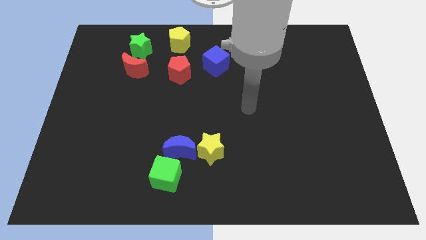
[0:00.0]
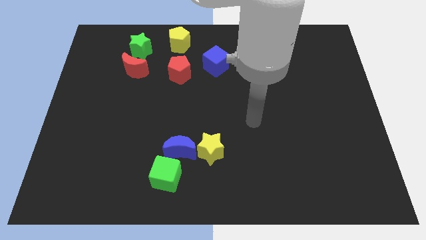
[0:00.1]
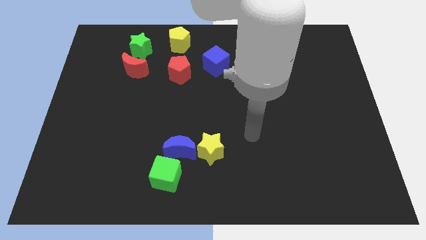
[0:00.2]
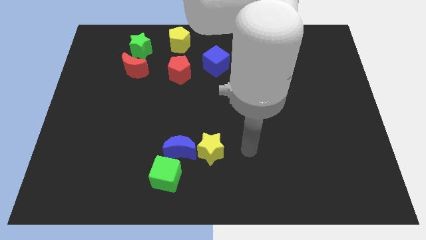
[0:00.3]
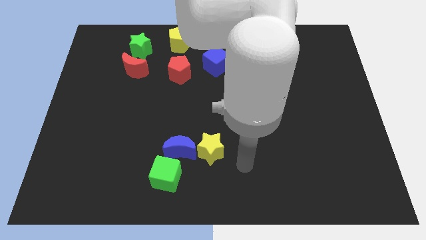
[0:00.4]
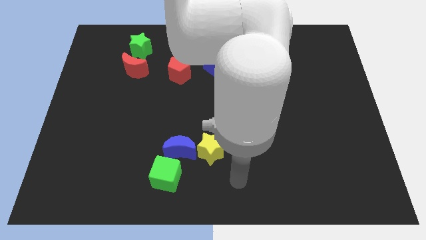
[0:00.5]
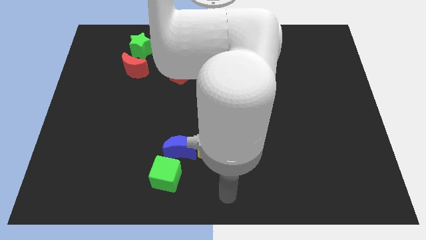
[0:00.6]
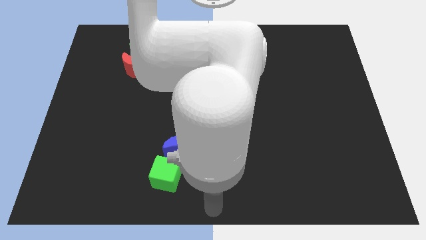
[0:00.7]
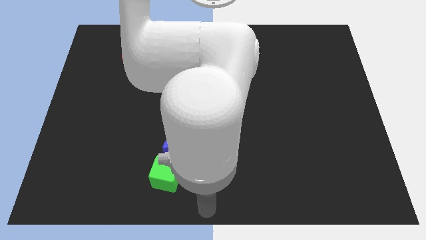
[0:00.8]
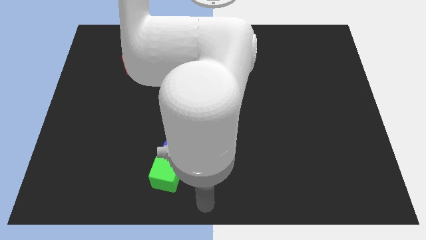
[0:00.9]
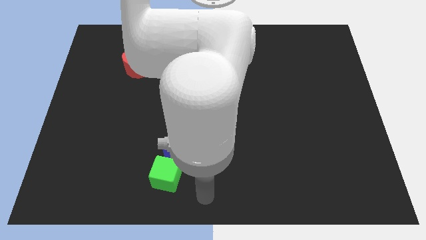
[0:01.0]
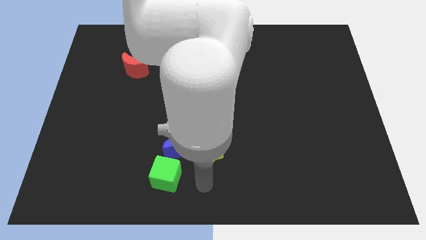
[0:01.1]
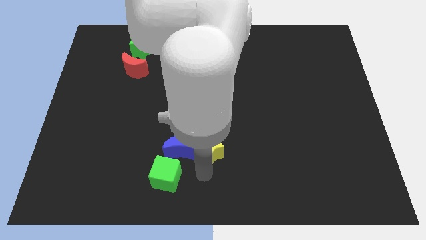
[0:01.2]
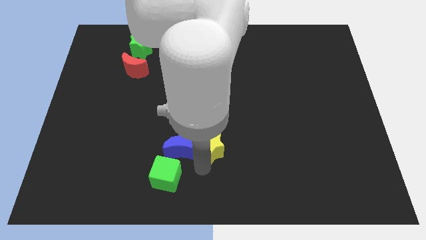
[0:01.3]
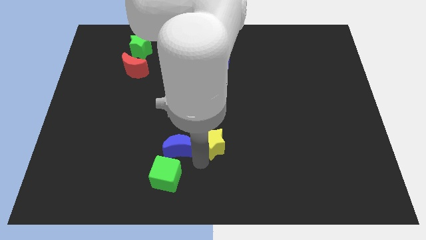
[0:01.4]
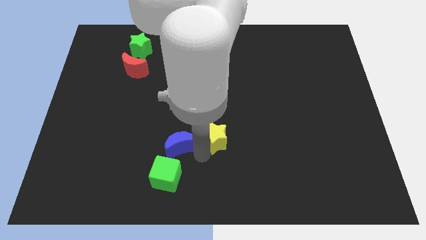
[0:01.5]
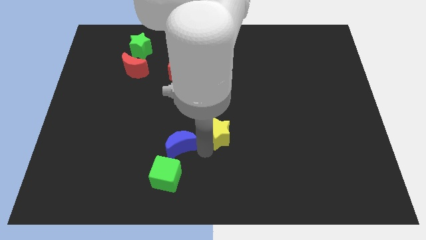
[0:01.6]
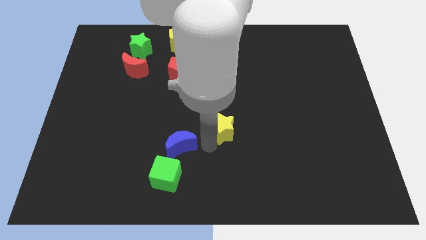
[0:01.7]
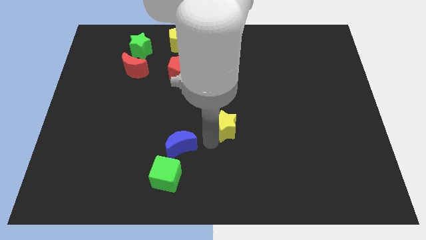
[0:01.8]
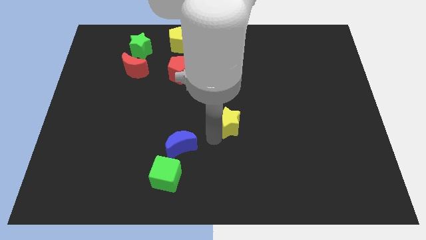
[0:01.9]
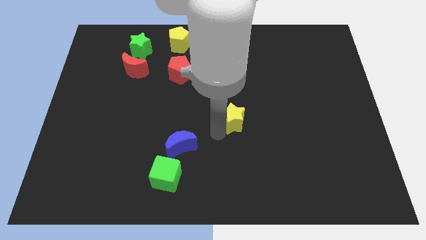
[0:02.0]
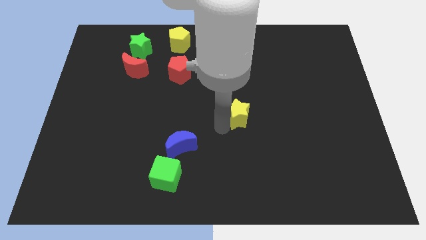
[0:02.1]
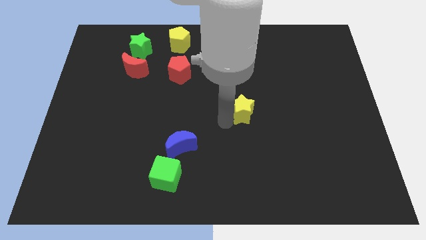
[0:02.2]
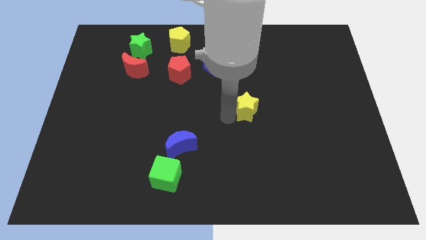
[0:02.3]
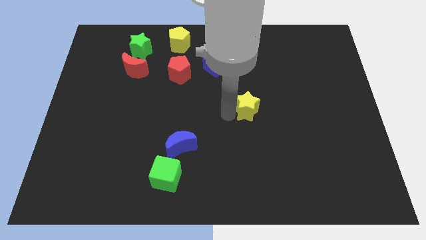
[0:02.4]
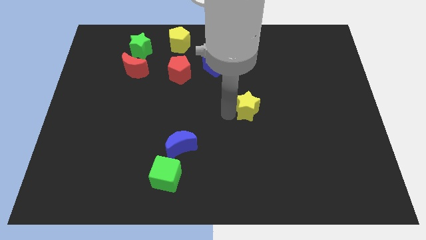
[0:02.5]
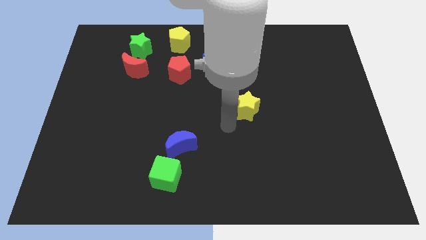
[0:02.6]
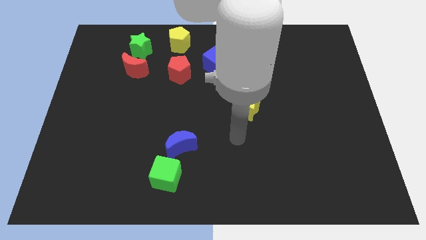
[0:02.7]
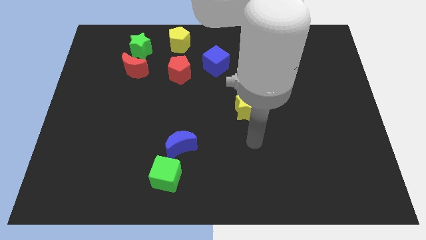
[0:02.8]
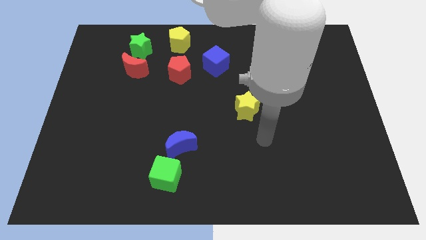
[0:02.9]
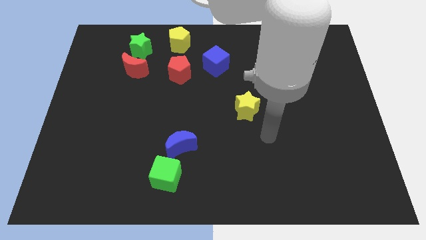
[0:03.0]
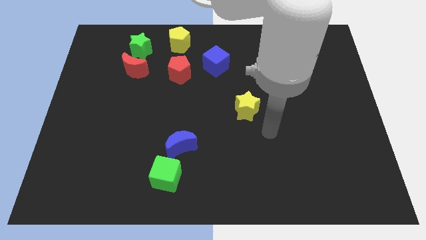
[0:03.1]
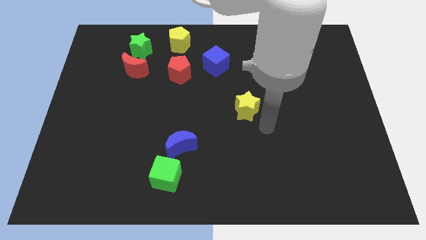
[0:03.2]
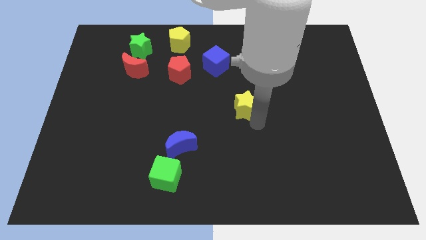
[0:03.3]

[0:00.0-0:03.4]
move the yellow star away from the blue crescent

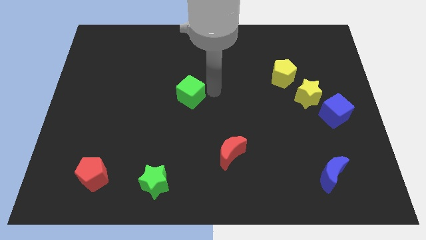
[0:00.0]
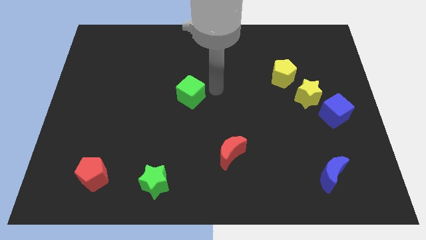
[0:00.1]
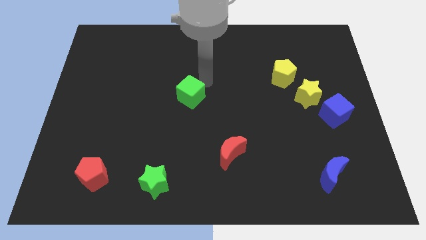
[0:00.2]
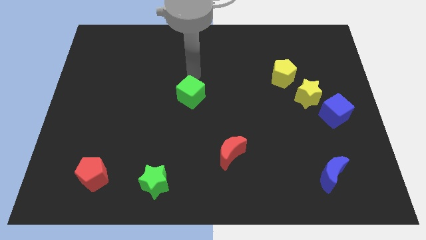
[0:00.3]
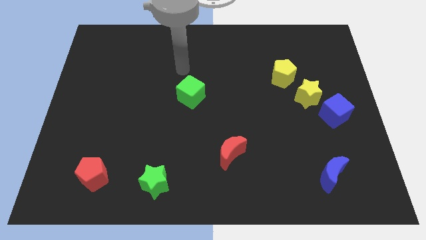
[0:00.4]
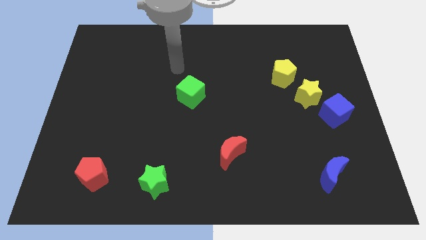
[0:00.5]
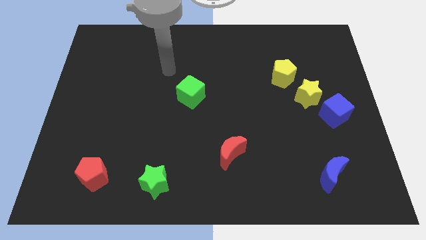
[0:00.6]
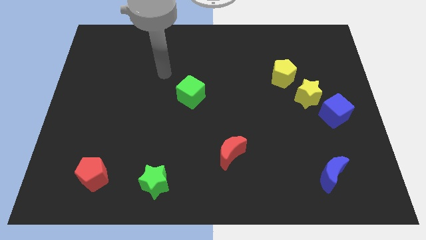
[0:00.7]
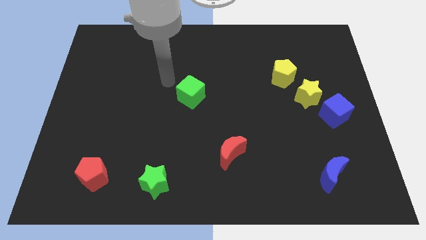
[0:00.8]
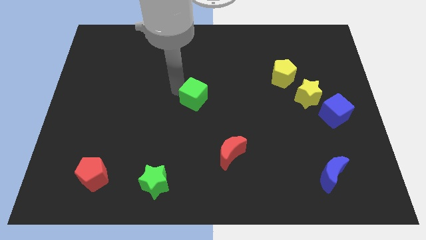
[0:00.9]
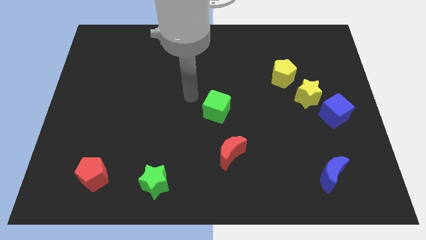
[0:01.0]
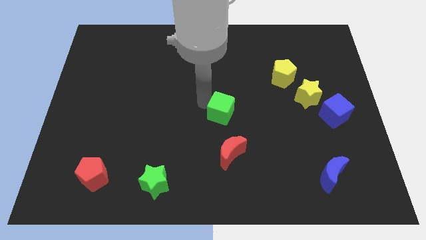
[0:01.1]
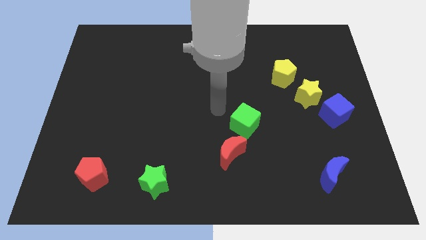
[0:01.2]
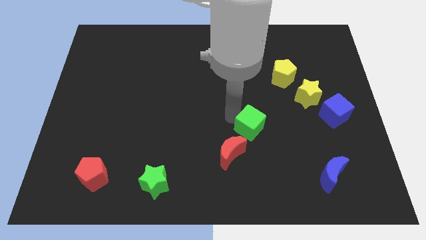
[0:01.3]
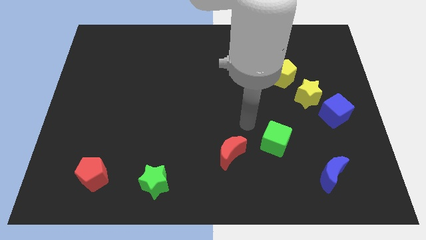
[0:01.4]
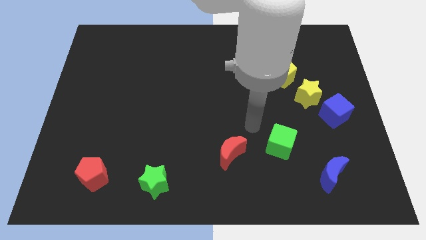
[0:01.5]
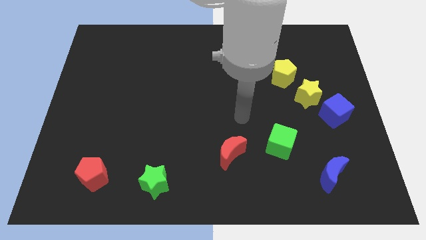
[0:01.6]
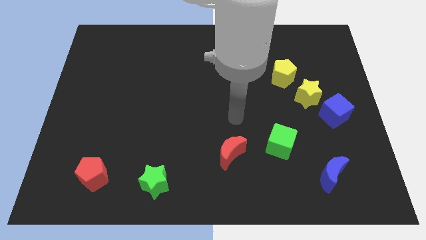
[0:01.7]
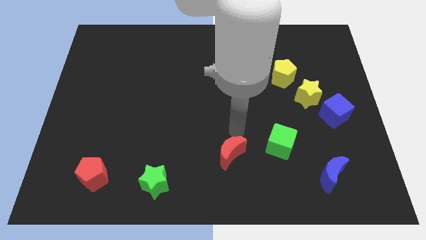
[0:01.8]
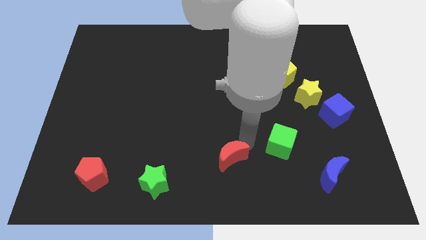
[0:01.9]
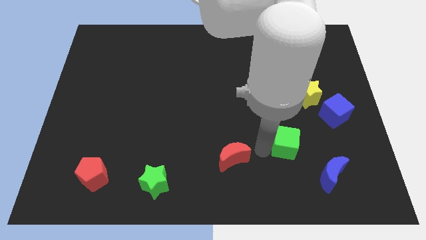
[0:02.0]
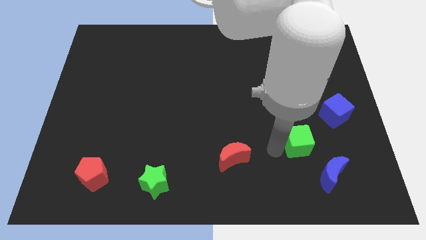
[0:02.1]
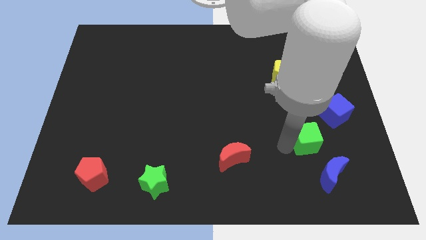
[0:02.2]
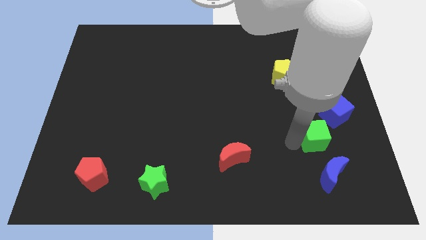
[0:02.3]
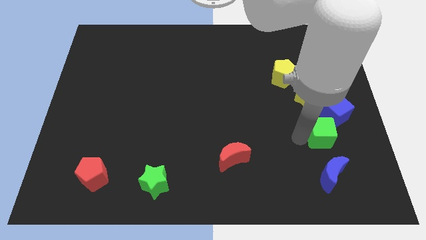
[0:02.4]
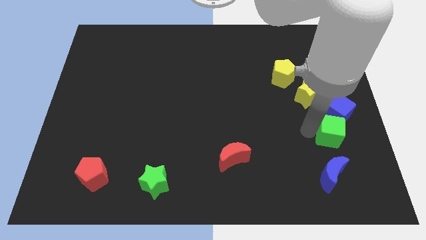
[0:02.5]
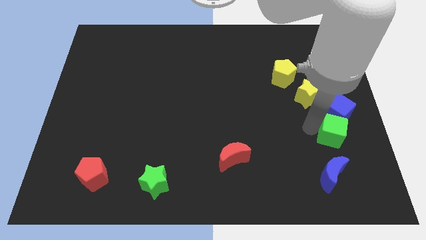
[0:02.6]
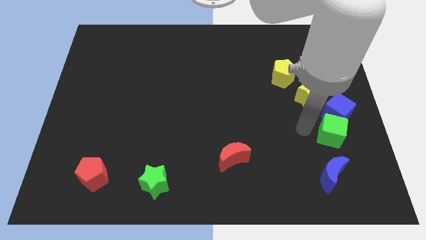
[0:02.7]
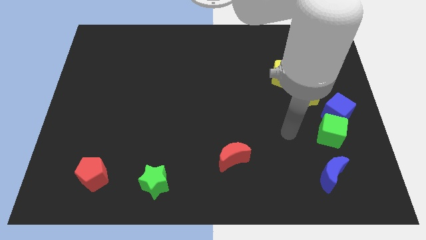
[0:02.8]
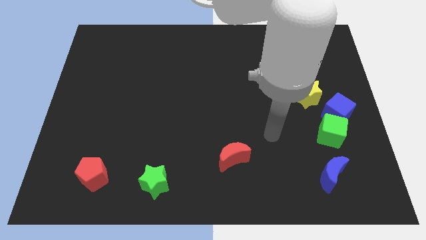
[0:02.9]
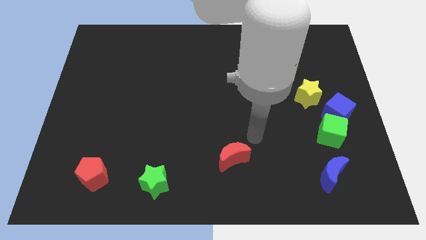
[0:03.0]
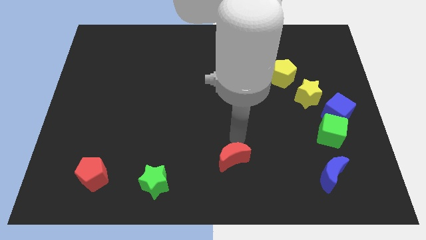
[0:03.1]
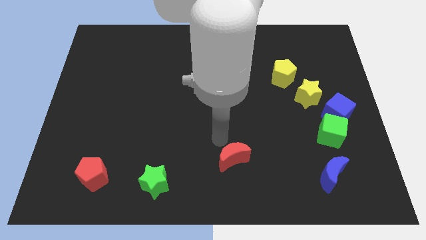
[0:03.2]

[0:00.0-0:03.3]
push the green cube to the bottom side of the blue cube

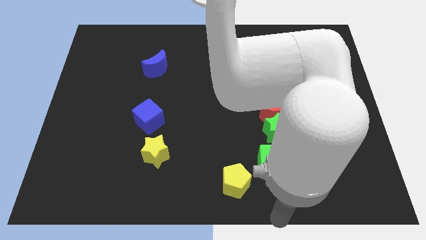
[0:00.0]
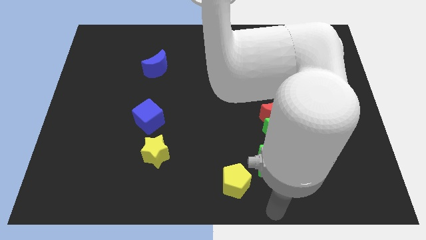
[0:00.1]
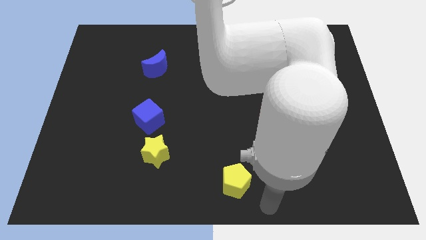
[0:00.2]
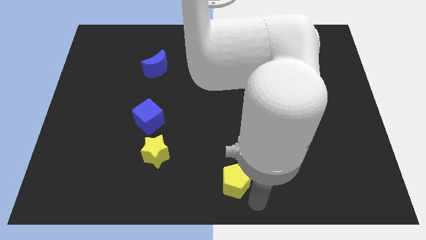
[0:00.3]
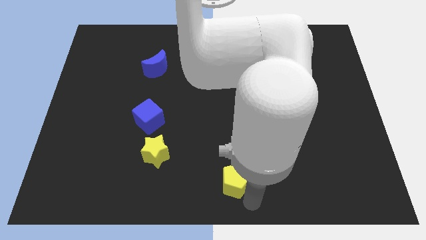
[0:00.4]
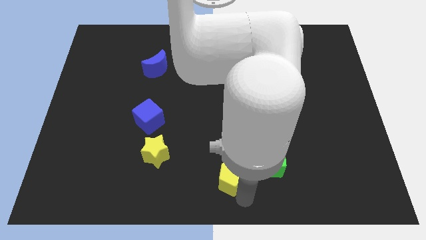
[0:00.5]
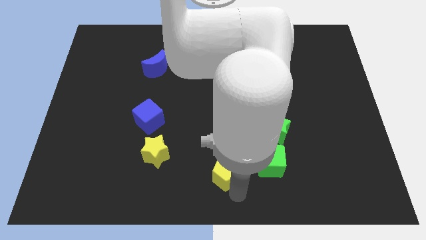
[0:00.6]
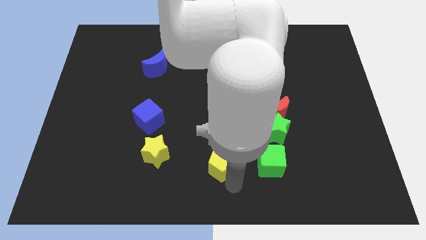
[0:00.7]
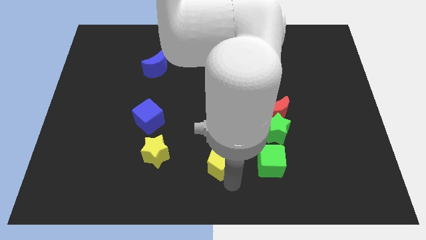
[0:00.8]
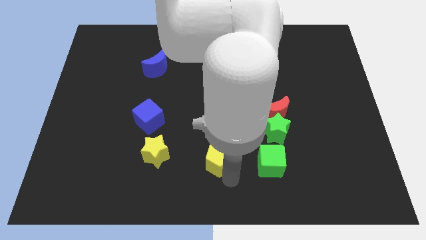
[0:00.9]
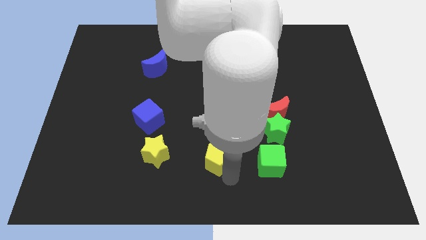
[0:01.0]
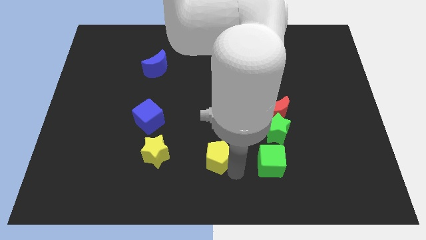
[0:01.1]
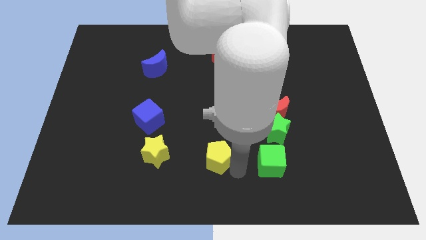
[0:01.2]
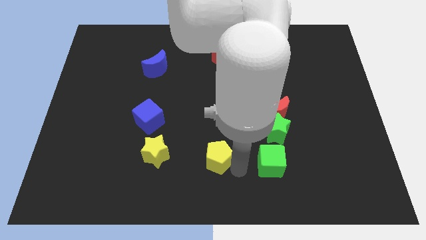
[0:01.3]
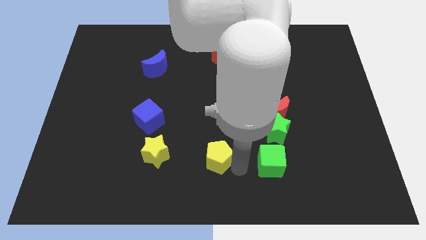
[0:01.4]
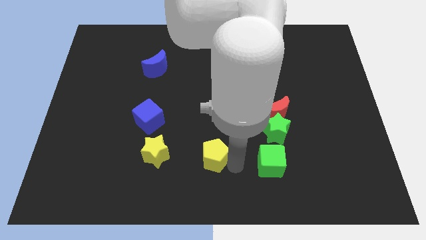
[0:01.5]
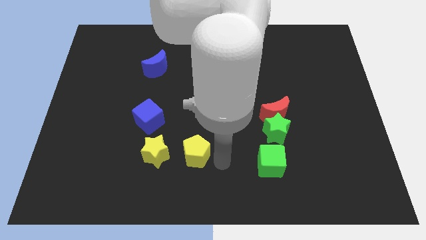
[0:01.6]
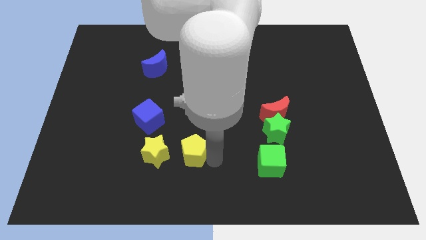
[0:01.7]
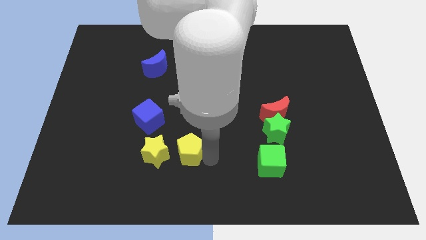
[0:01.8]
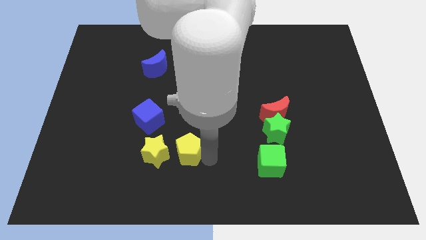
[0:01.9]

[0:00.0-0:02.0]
push the yellow pentagon to the right of the yellow star

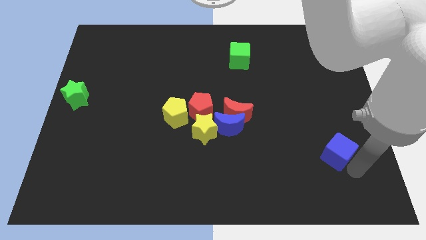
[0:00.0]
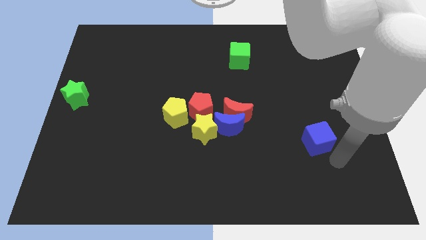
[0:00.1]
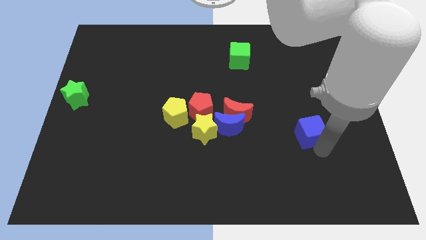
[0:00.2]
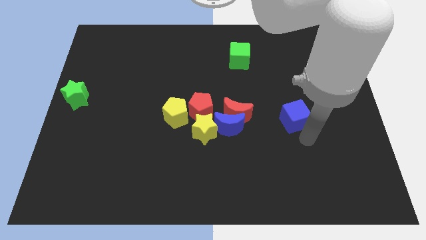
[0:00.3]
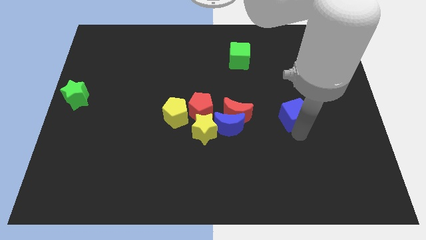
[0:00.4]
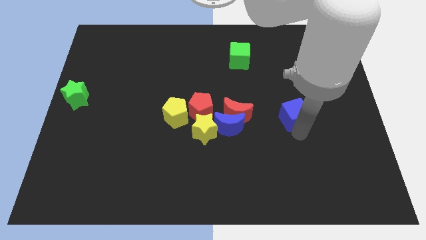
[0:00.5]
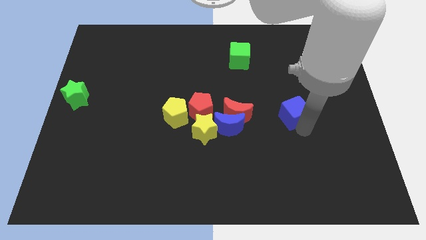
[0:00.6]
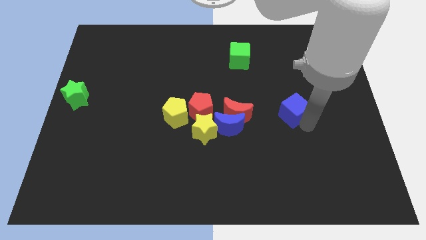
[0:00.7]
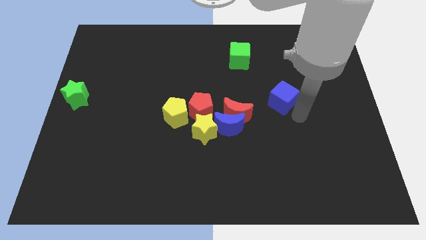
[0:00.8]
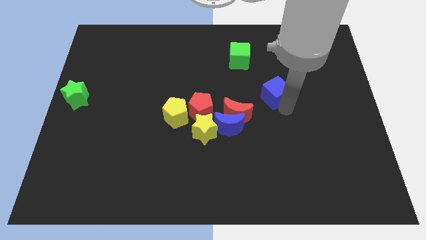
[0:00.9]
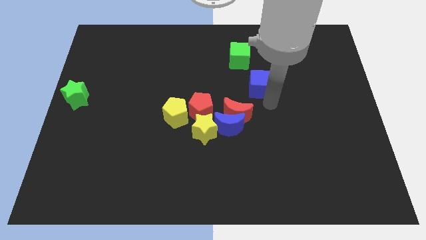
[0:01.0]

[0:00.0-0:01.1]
push the blue cube towards the right bottom side of the green cube
